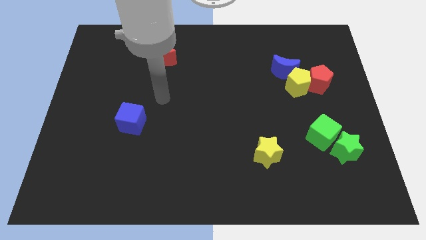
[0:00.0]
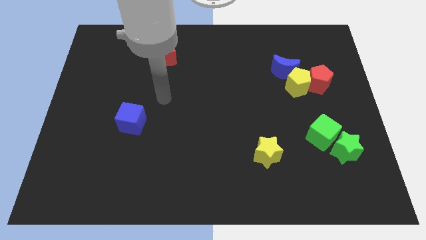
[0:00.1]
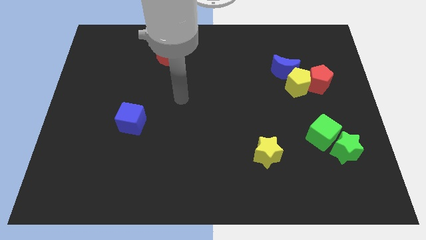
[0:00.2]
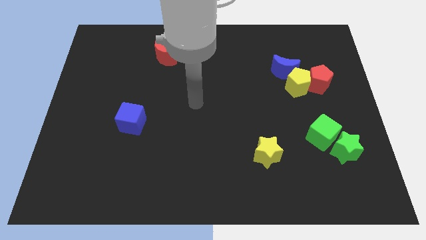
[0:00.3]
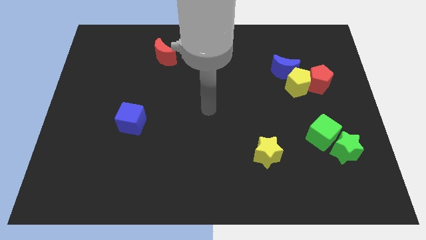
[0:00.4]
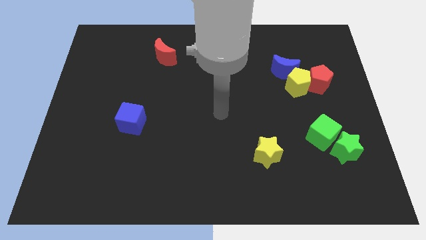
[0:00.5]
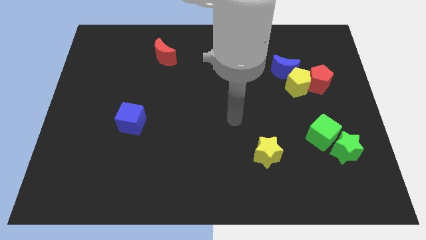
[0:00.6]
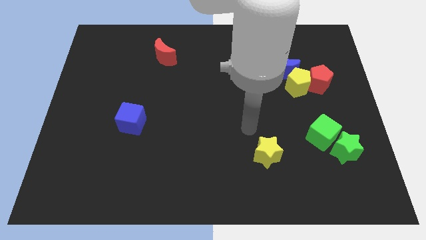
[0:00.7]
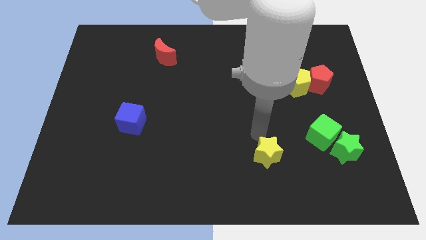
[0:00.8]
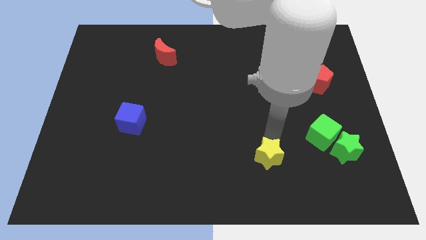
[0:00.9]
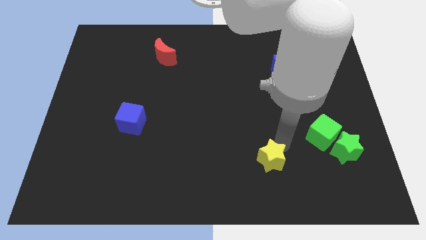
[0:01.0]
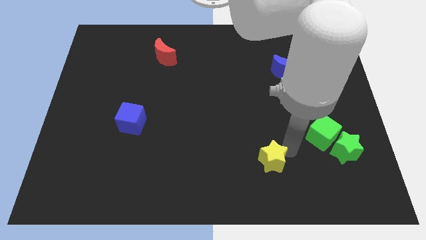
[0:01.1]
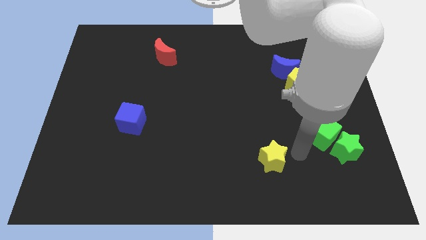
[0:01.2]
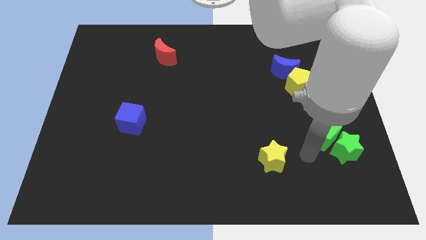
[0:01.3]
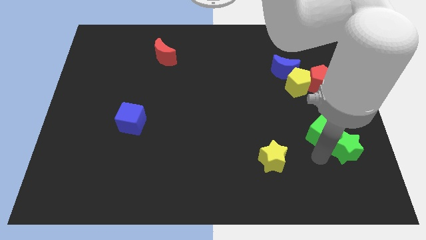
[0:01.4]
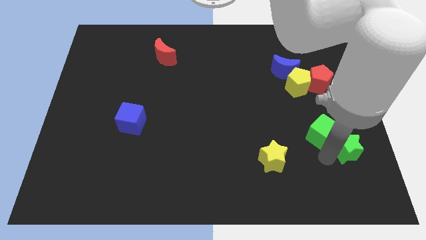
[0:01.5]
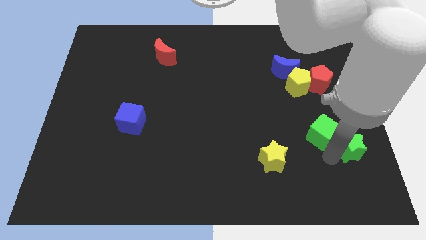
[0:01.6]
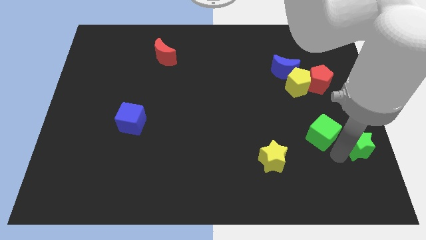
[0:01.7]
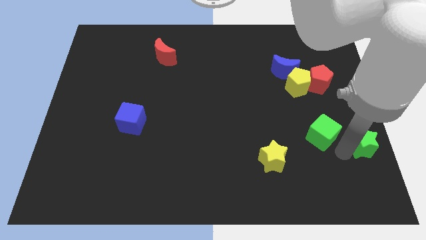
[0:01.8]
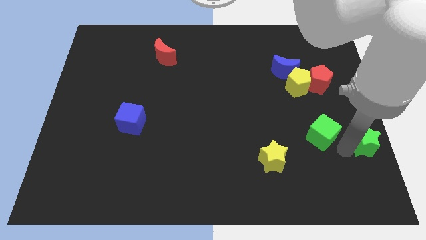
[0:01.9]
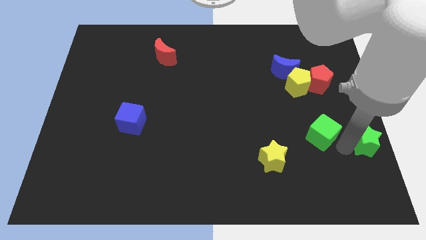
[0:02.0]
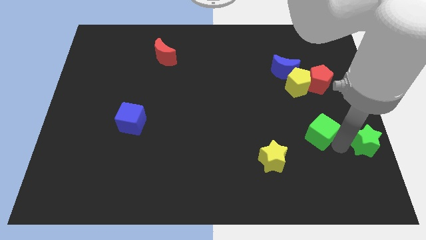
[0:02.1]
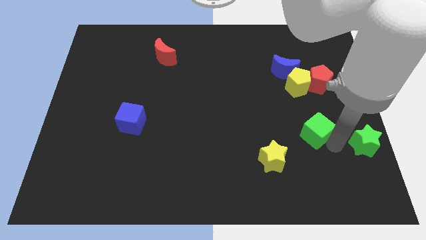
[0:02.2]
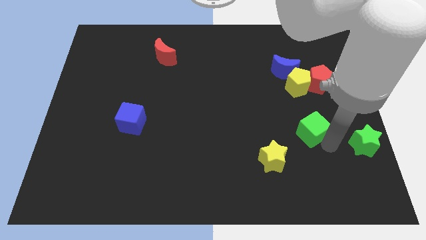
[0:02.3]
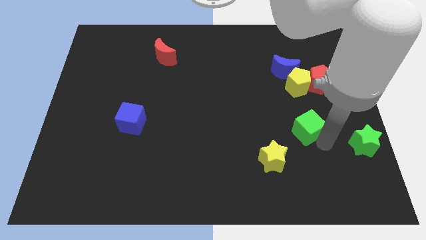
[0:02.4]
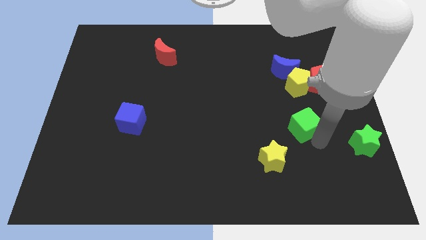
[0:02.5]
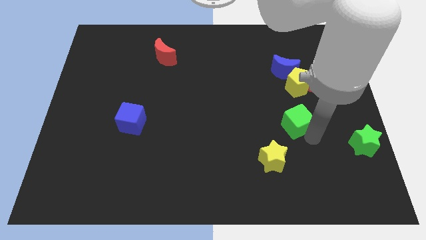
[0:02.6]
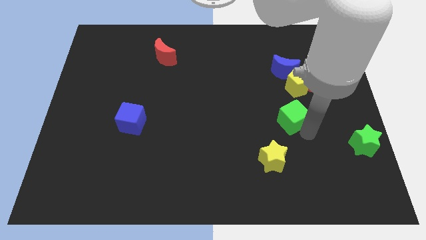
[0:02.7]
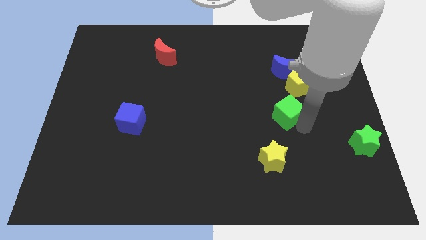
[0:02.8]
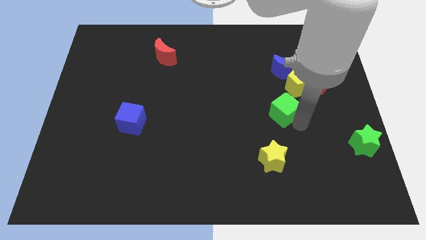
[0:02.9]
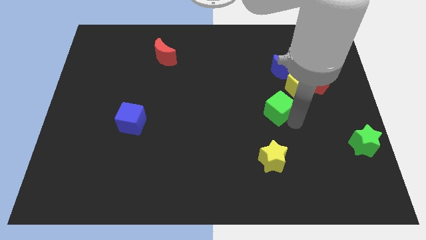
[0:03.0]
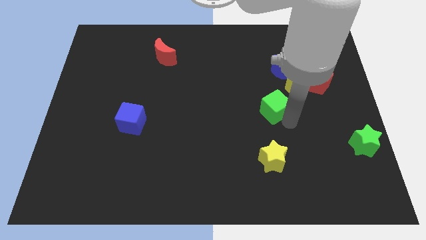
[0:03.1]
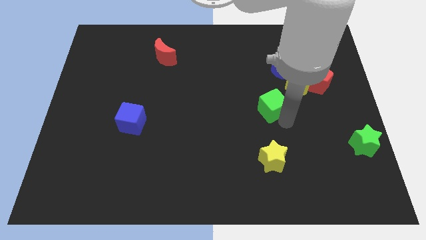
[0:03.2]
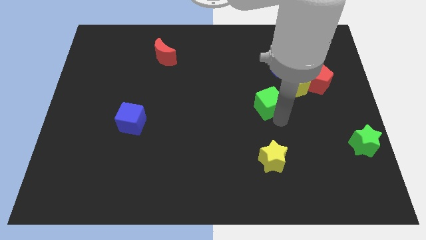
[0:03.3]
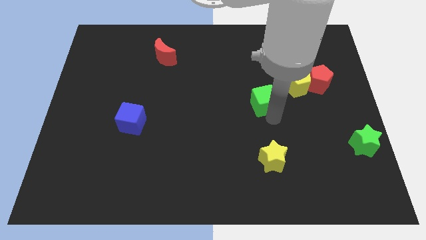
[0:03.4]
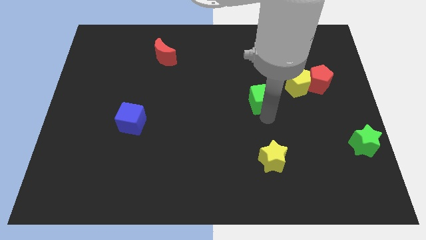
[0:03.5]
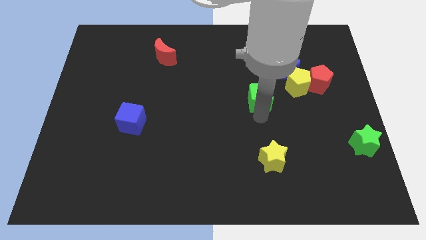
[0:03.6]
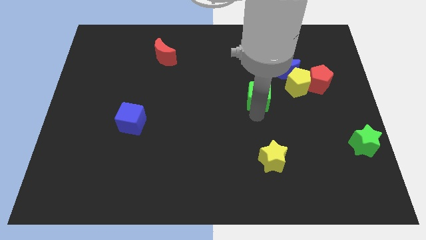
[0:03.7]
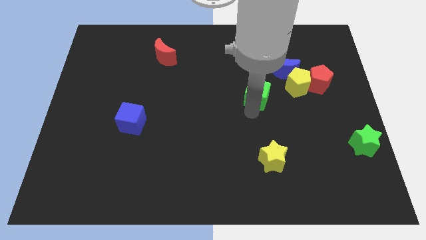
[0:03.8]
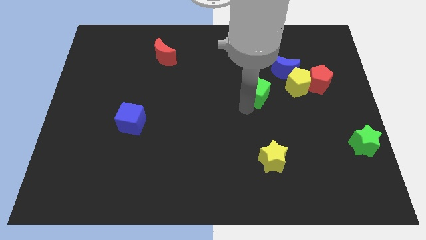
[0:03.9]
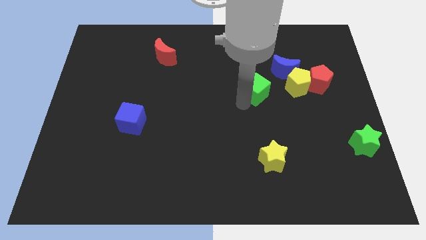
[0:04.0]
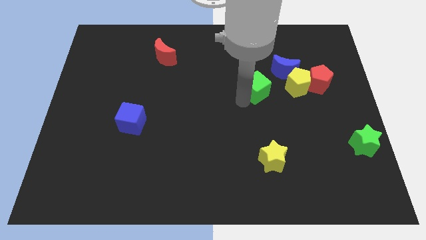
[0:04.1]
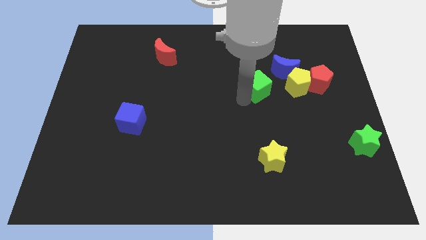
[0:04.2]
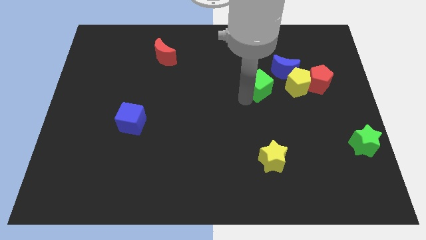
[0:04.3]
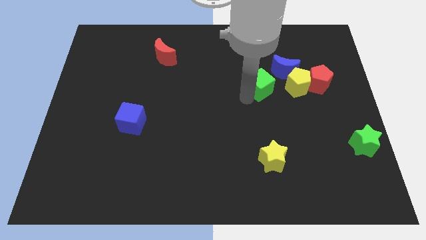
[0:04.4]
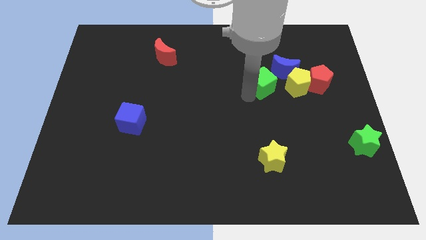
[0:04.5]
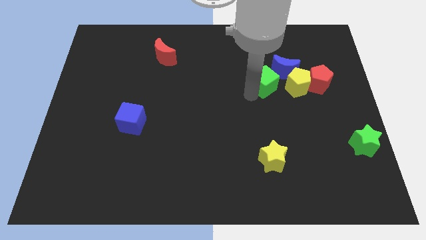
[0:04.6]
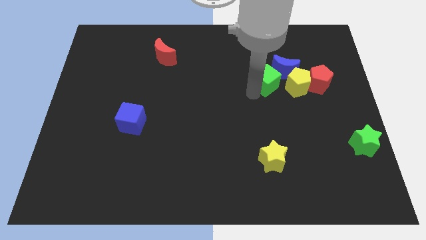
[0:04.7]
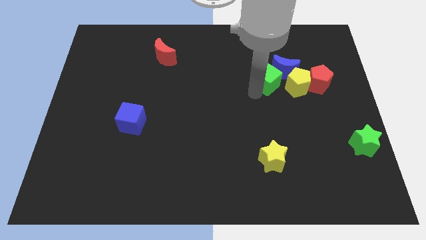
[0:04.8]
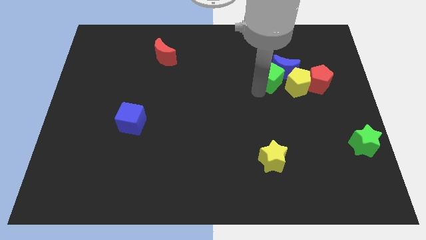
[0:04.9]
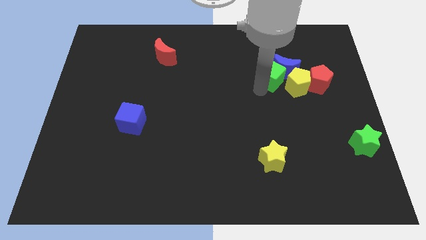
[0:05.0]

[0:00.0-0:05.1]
push the green cube towards the blue moon

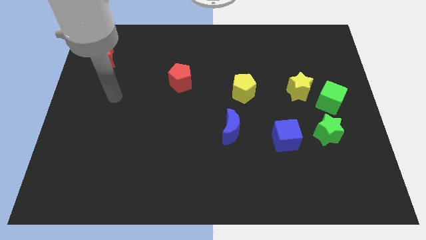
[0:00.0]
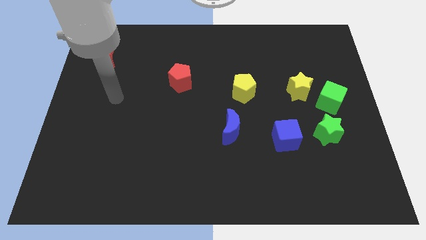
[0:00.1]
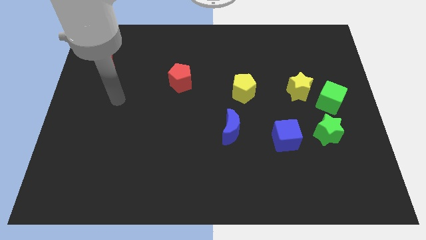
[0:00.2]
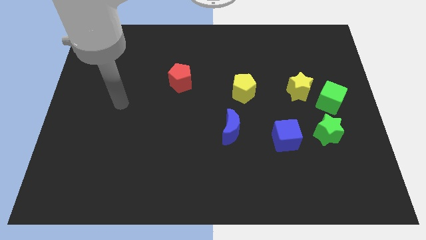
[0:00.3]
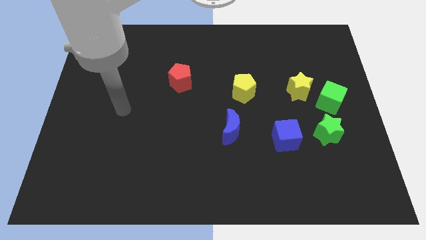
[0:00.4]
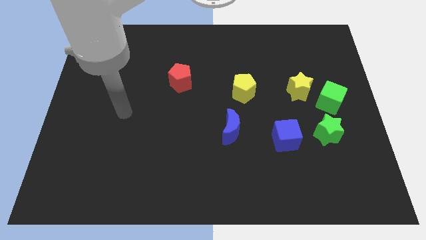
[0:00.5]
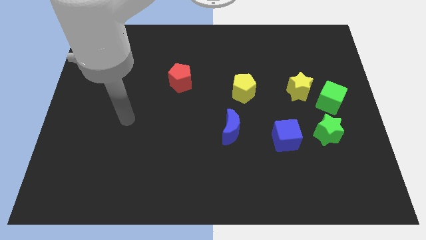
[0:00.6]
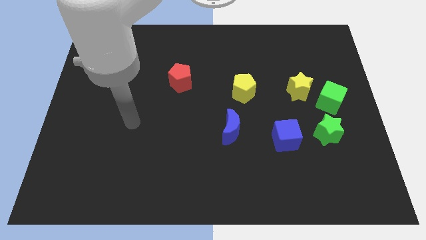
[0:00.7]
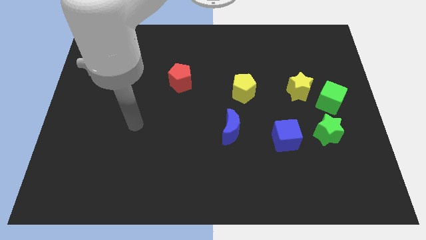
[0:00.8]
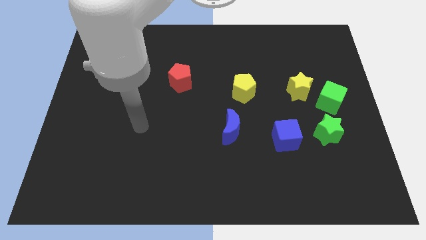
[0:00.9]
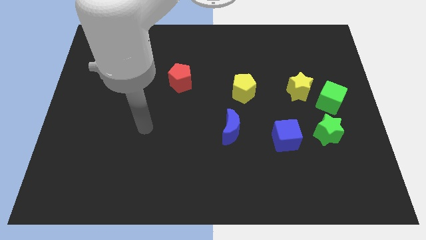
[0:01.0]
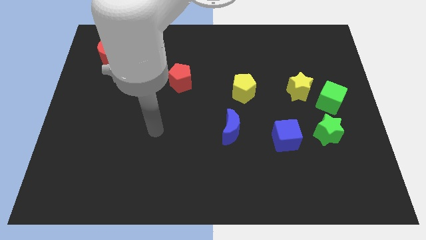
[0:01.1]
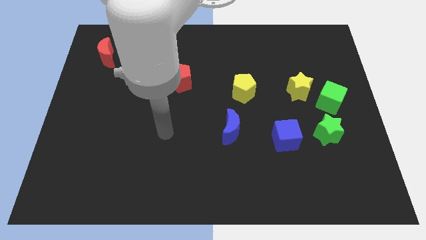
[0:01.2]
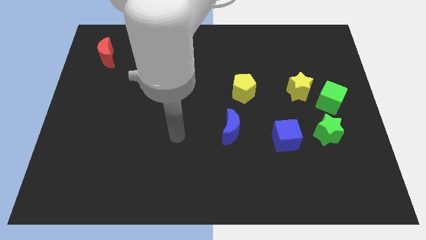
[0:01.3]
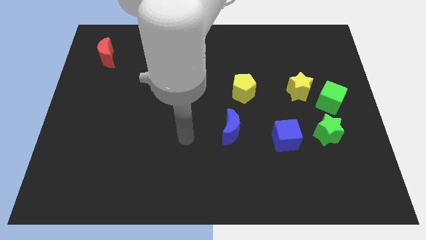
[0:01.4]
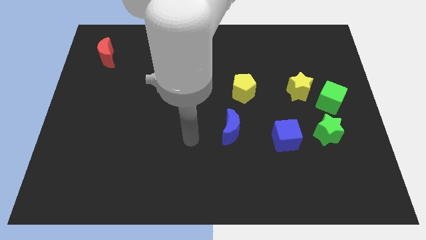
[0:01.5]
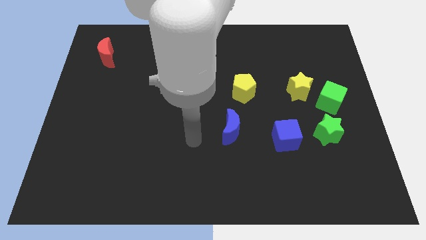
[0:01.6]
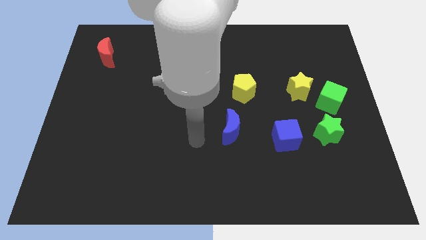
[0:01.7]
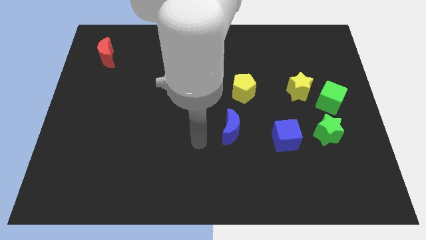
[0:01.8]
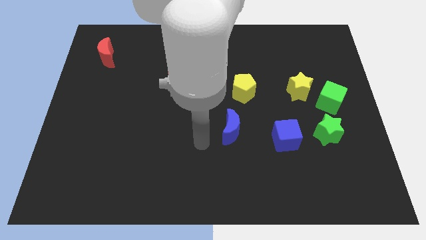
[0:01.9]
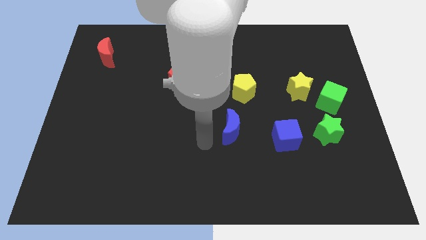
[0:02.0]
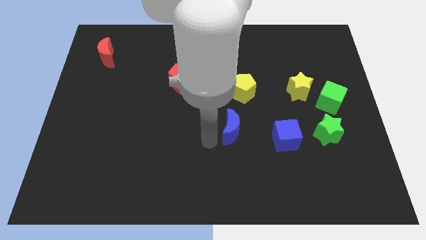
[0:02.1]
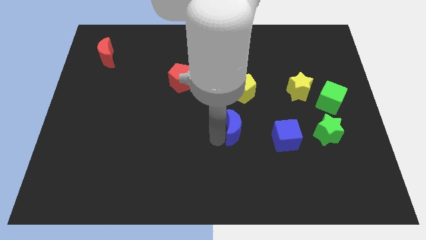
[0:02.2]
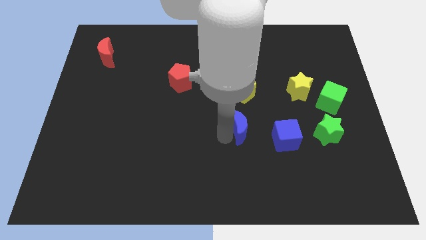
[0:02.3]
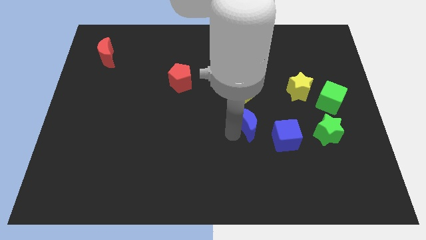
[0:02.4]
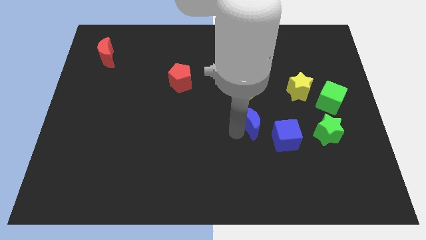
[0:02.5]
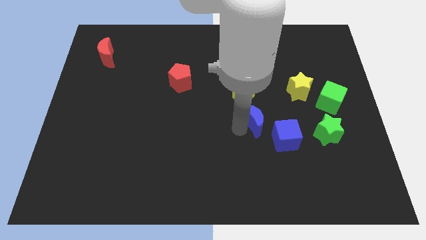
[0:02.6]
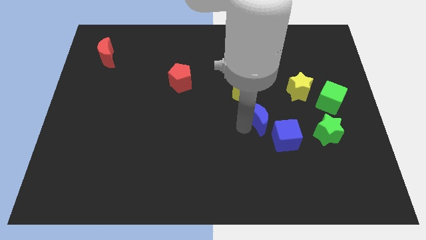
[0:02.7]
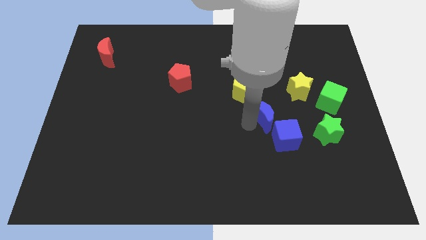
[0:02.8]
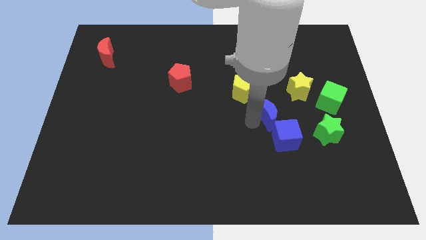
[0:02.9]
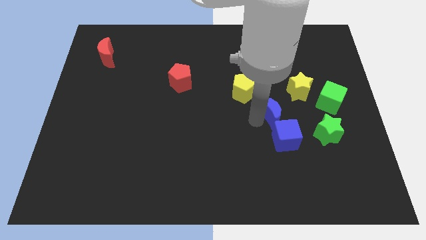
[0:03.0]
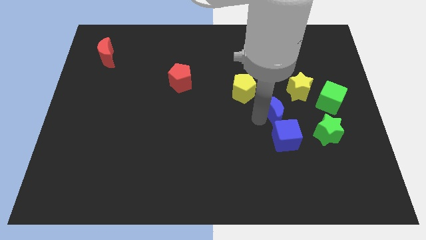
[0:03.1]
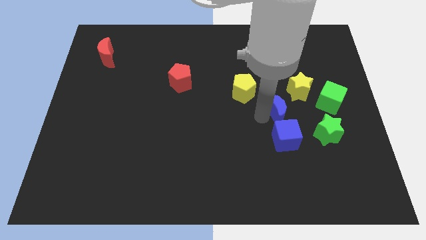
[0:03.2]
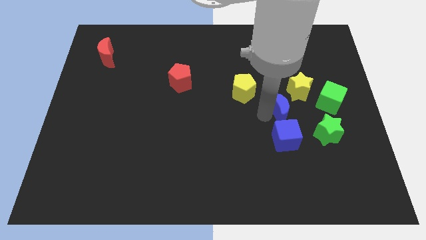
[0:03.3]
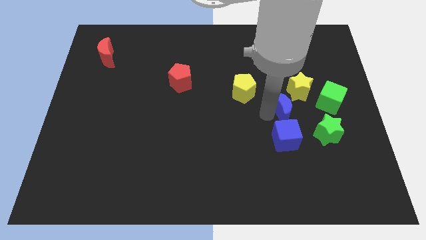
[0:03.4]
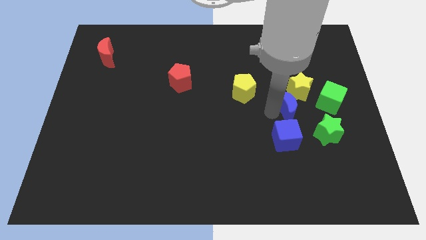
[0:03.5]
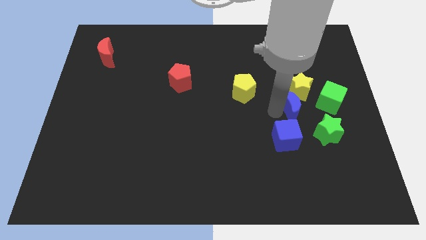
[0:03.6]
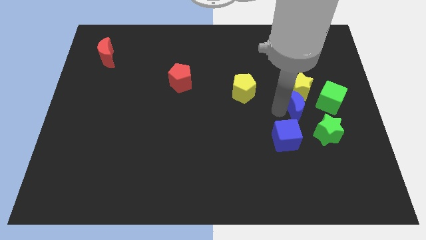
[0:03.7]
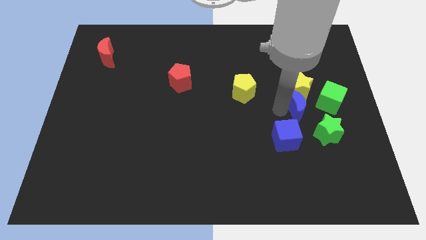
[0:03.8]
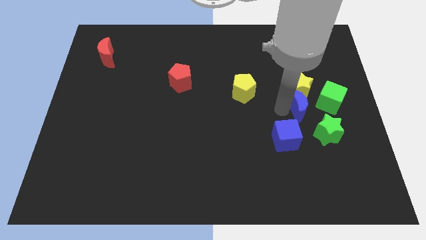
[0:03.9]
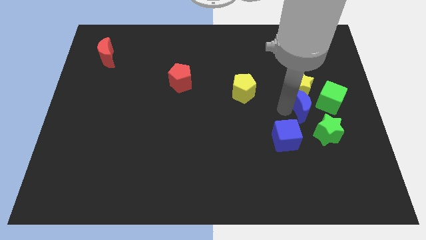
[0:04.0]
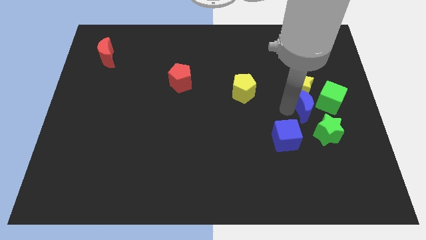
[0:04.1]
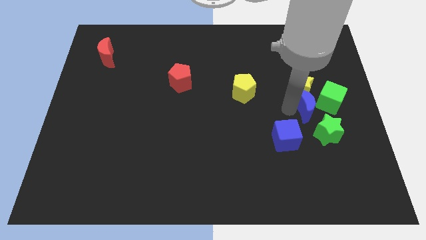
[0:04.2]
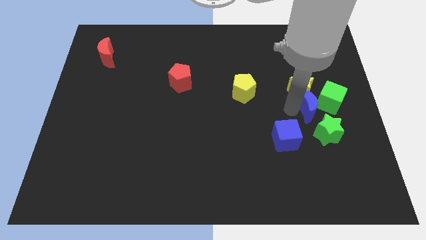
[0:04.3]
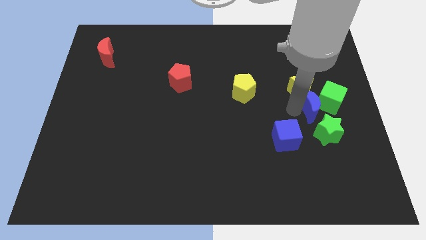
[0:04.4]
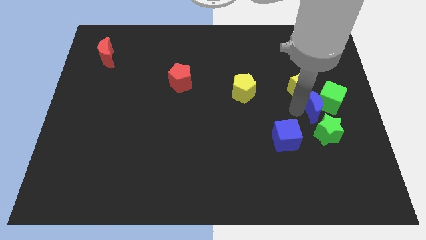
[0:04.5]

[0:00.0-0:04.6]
put the blue moon close to the green cube
